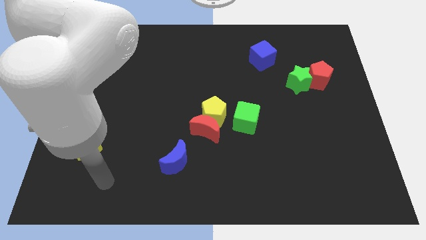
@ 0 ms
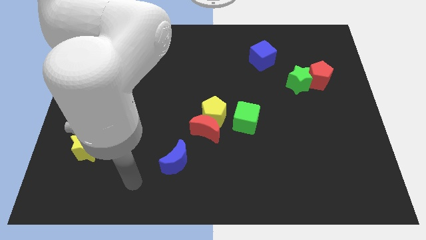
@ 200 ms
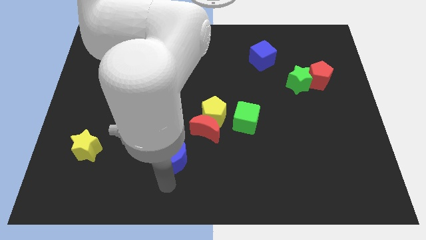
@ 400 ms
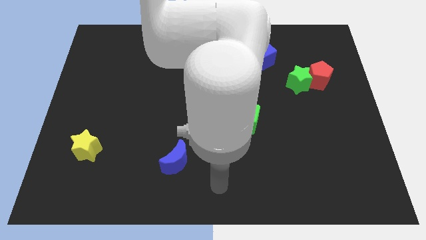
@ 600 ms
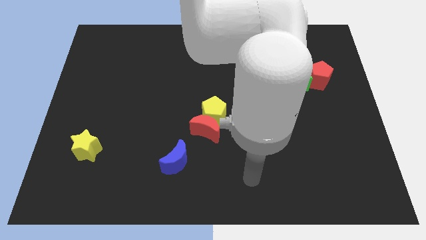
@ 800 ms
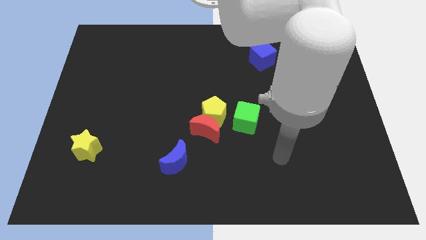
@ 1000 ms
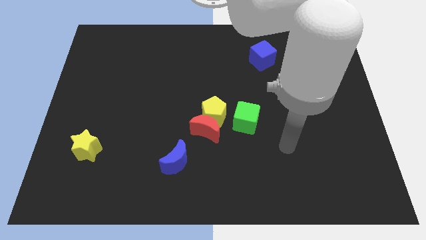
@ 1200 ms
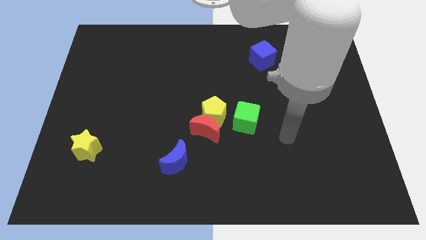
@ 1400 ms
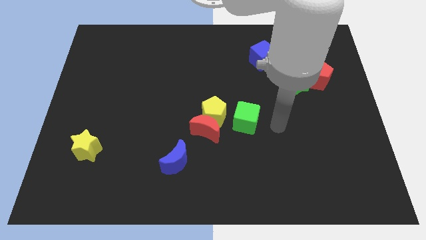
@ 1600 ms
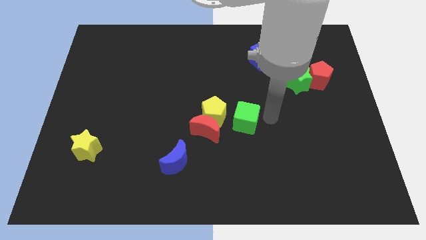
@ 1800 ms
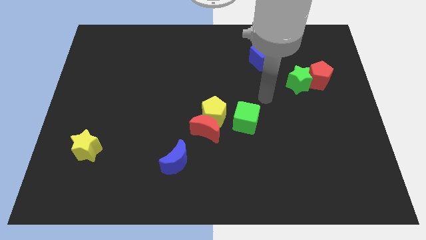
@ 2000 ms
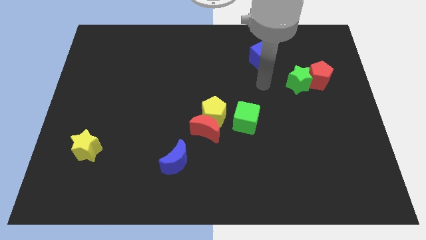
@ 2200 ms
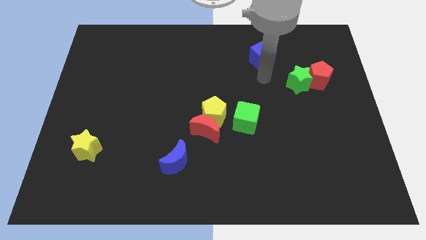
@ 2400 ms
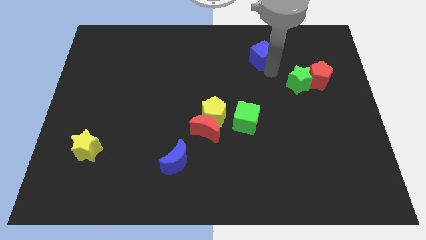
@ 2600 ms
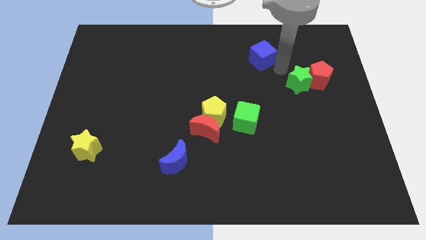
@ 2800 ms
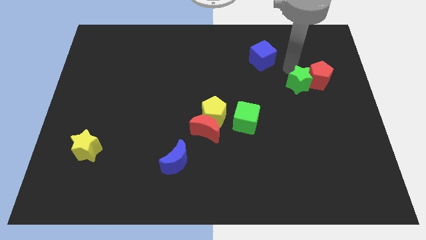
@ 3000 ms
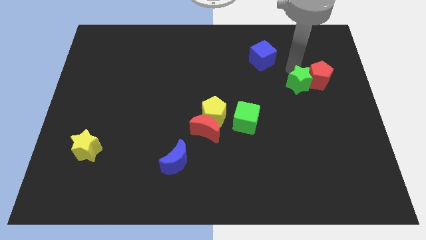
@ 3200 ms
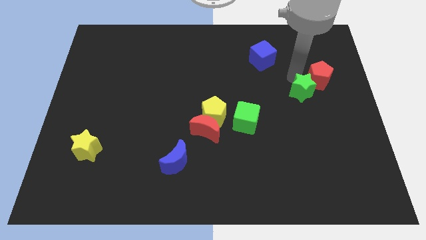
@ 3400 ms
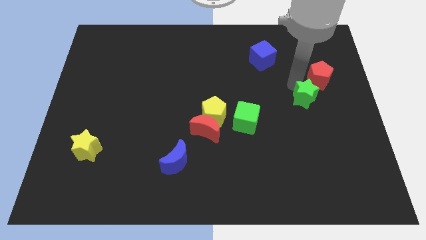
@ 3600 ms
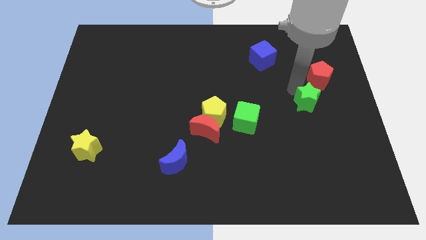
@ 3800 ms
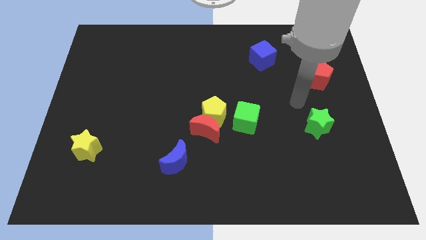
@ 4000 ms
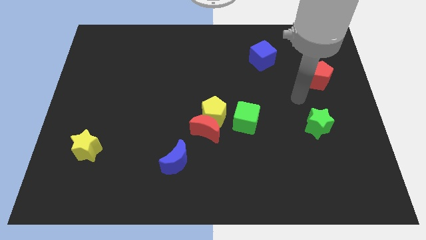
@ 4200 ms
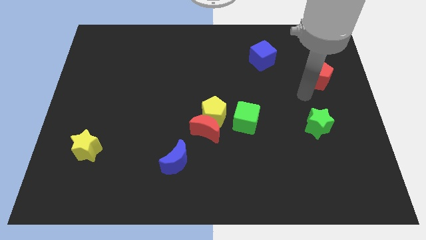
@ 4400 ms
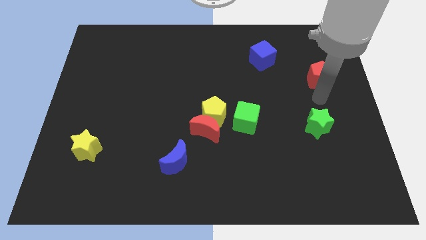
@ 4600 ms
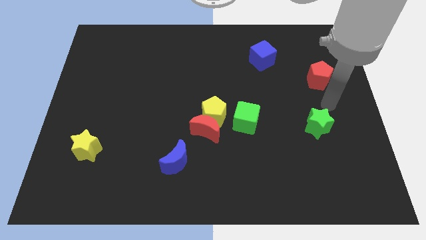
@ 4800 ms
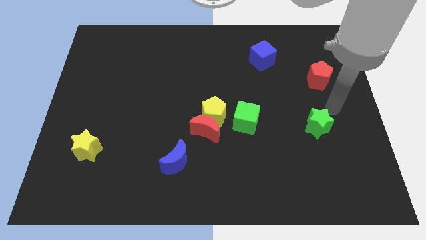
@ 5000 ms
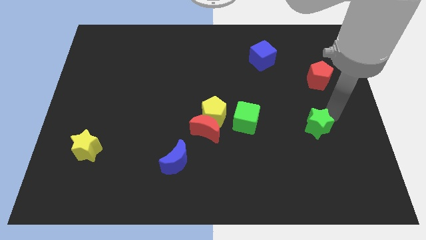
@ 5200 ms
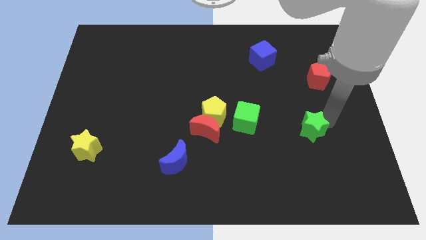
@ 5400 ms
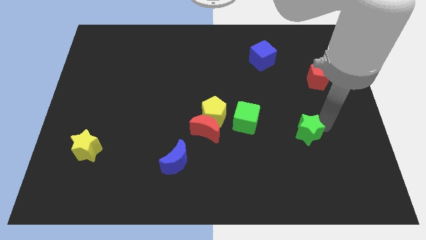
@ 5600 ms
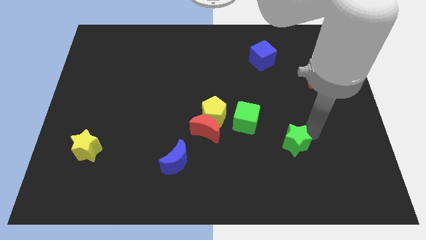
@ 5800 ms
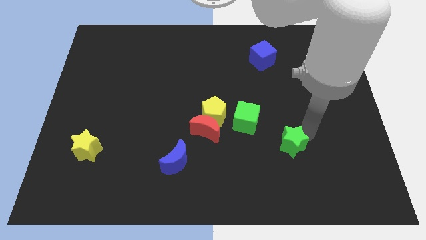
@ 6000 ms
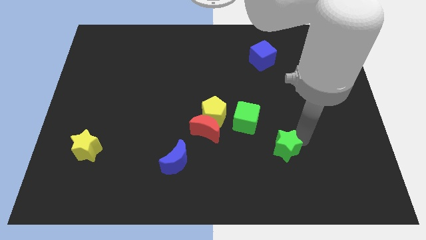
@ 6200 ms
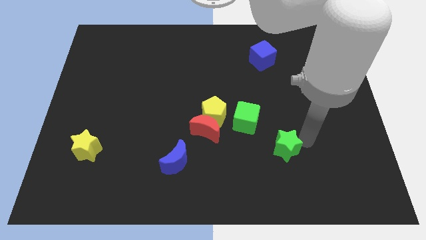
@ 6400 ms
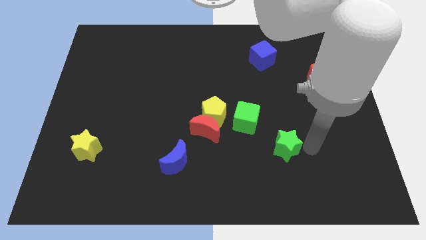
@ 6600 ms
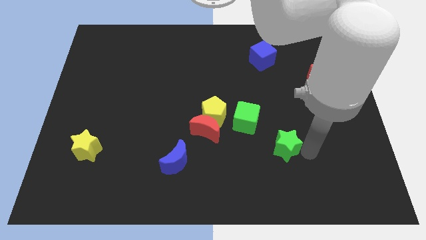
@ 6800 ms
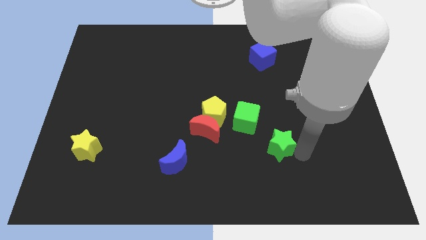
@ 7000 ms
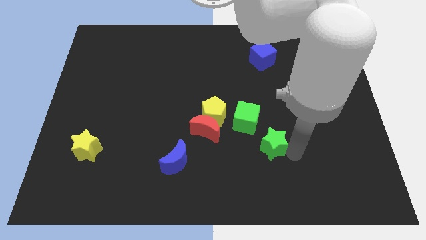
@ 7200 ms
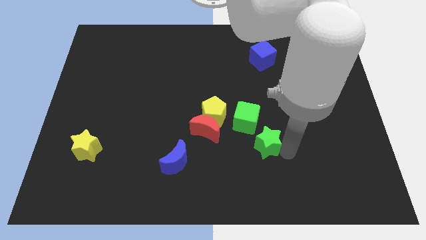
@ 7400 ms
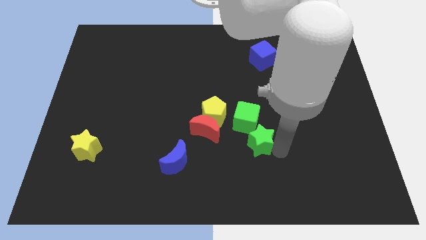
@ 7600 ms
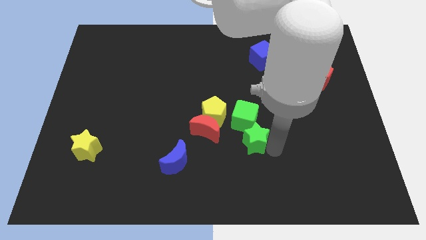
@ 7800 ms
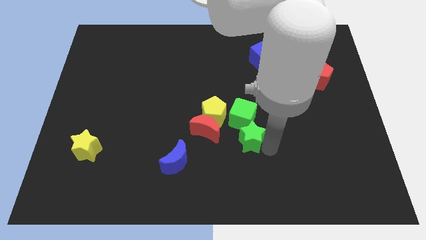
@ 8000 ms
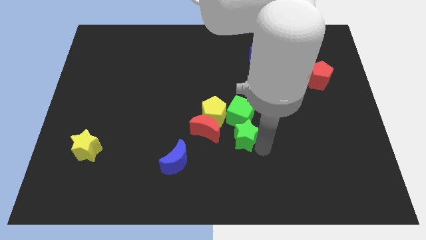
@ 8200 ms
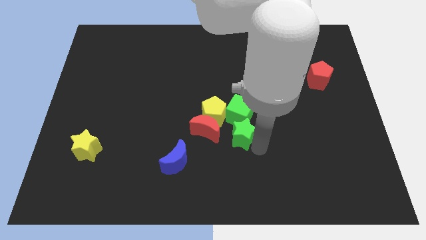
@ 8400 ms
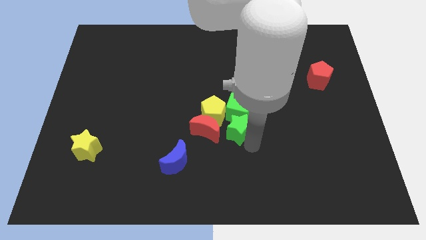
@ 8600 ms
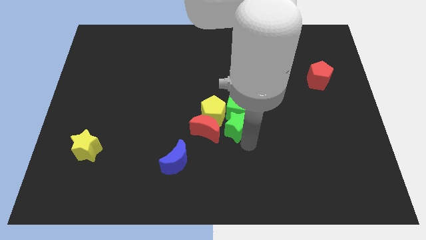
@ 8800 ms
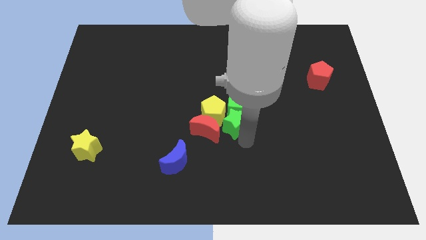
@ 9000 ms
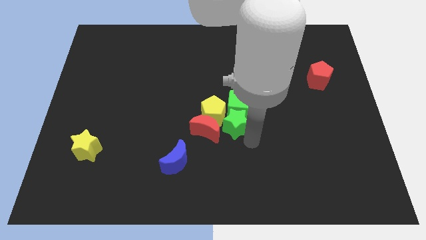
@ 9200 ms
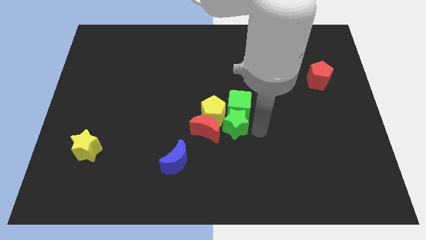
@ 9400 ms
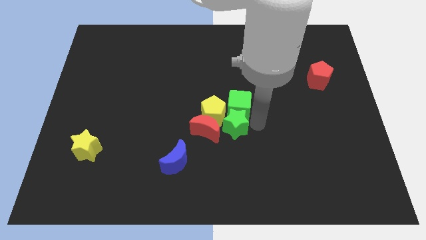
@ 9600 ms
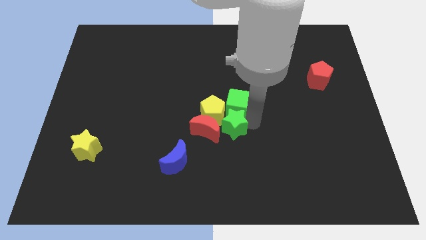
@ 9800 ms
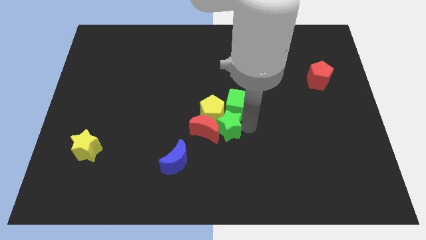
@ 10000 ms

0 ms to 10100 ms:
move the green star to the red moon

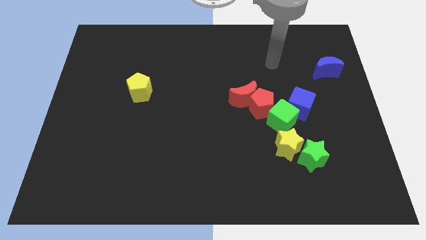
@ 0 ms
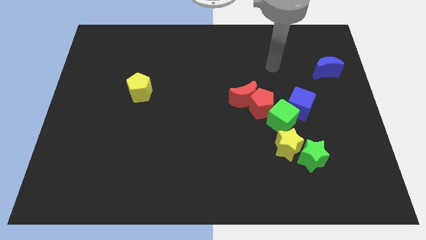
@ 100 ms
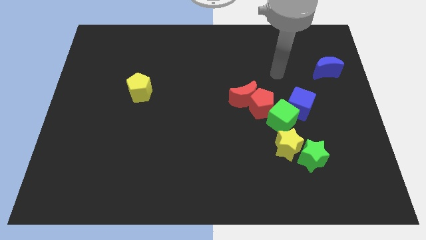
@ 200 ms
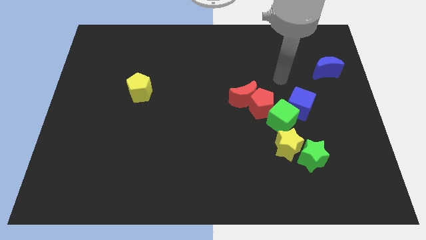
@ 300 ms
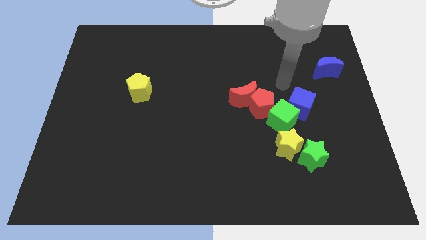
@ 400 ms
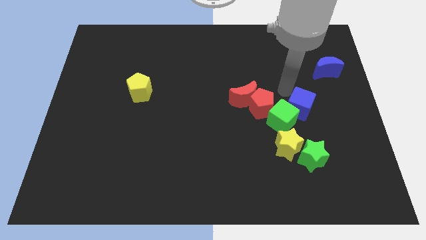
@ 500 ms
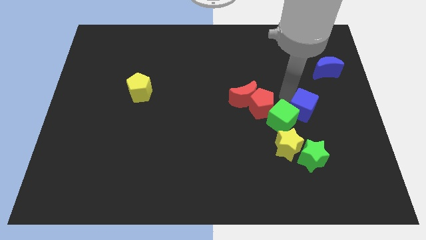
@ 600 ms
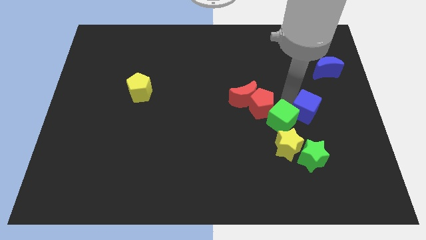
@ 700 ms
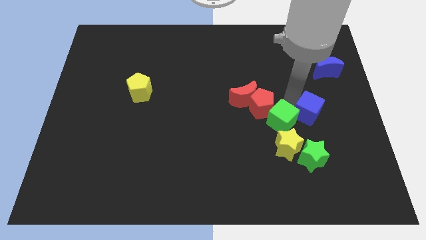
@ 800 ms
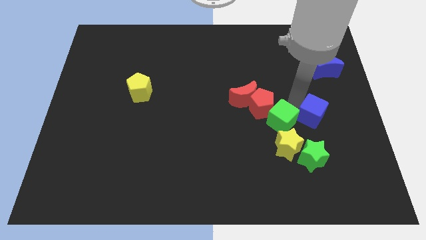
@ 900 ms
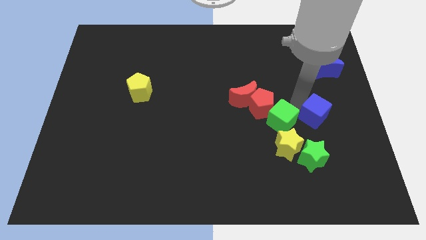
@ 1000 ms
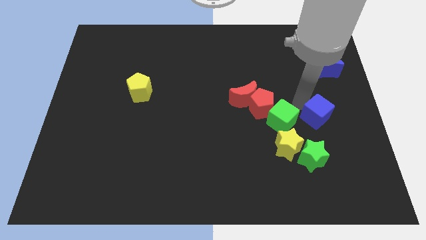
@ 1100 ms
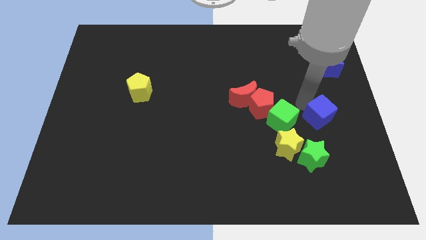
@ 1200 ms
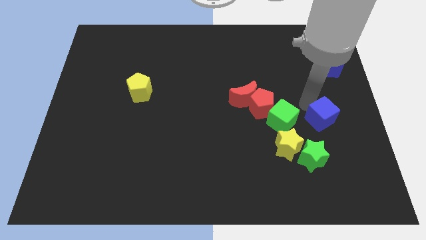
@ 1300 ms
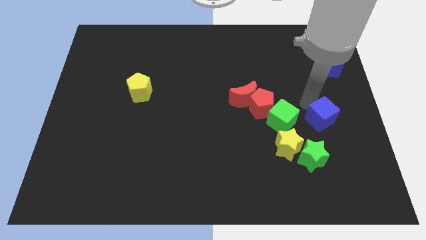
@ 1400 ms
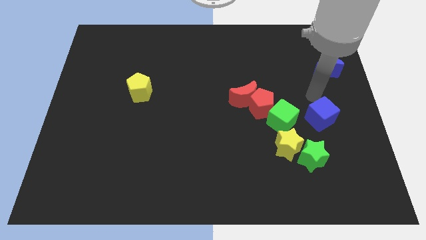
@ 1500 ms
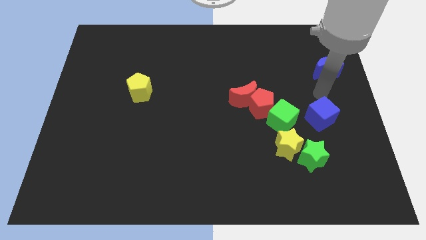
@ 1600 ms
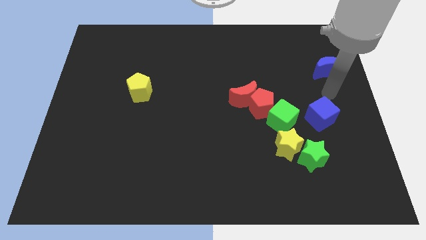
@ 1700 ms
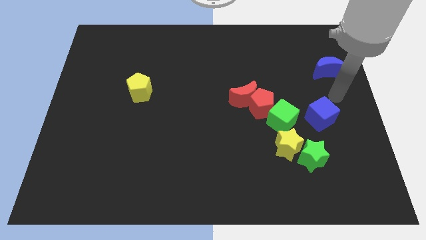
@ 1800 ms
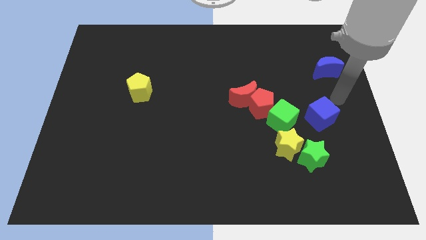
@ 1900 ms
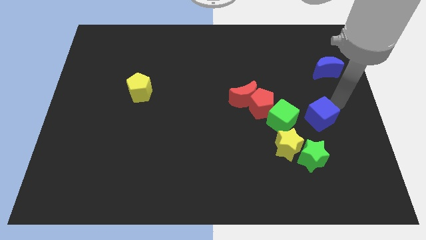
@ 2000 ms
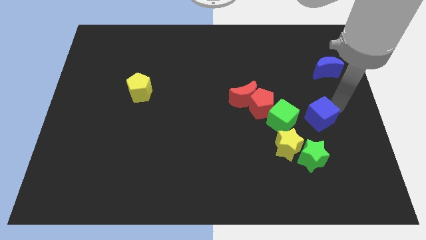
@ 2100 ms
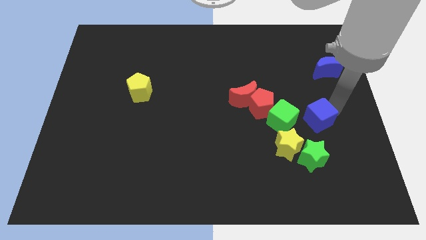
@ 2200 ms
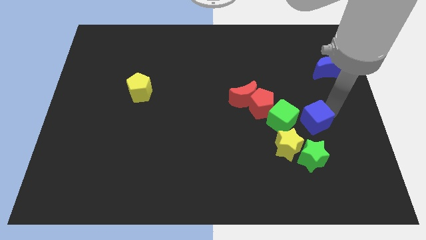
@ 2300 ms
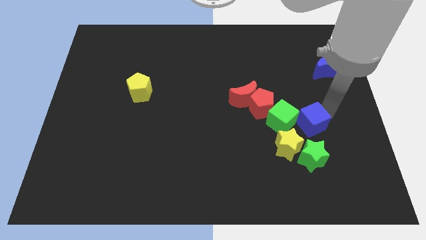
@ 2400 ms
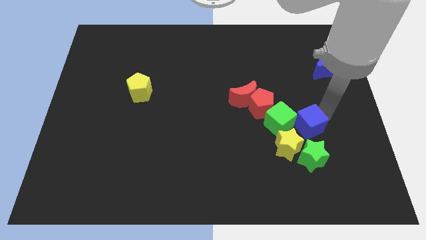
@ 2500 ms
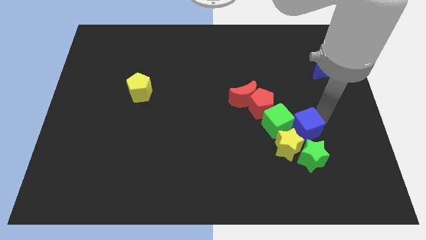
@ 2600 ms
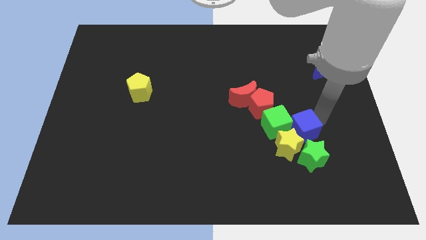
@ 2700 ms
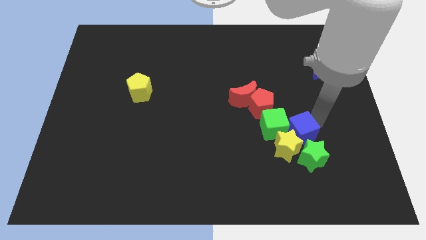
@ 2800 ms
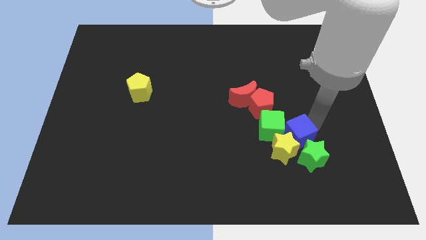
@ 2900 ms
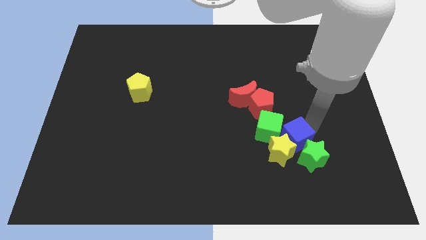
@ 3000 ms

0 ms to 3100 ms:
put the blue cube to the yellow star

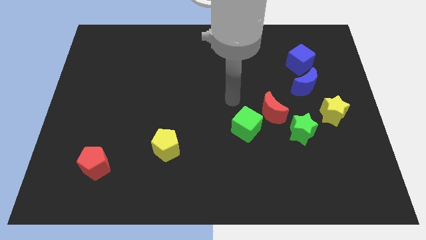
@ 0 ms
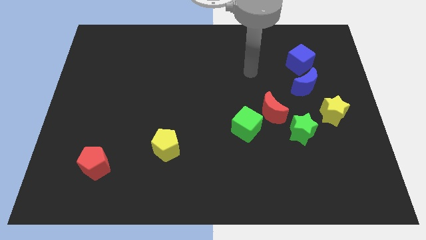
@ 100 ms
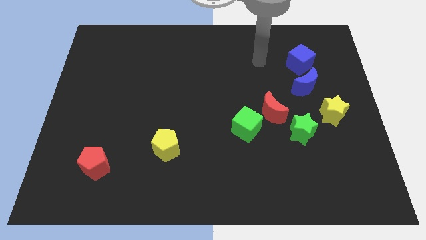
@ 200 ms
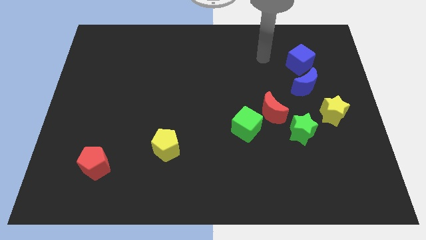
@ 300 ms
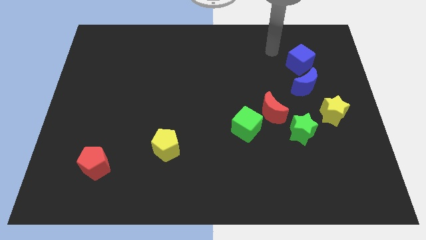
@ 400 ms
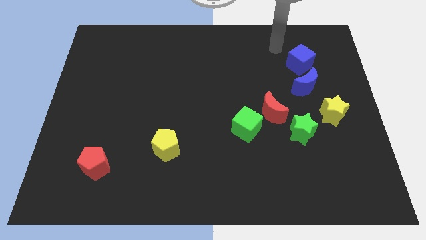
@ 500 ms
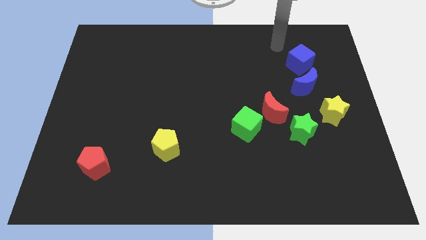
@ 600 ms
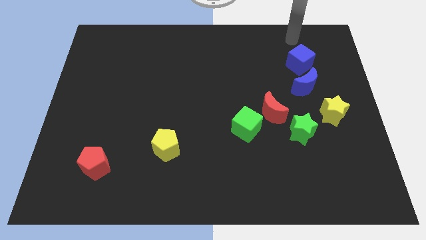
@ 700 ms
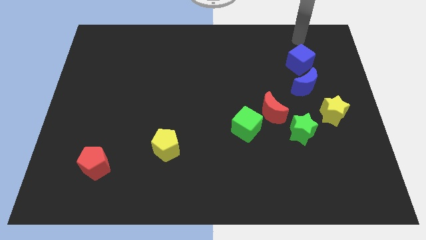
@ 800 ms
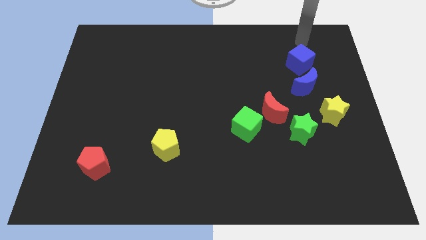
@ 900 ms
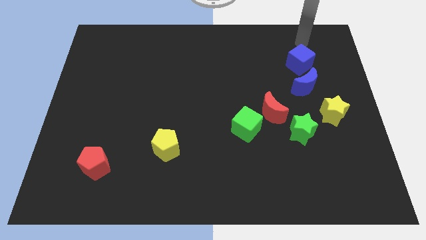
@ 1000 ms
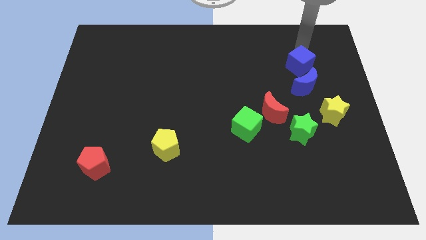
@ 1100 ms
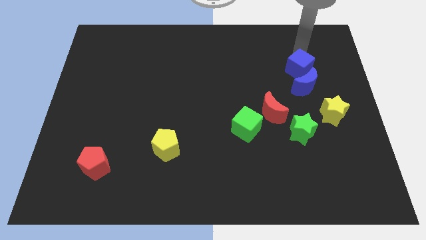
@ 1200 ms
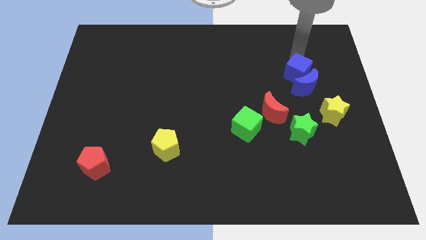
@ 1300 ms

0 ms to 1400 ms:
move the blue cube next to the blue moon
